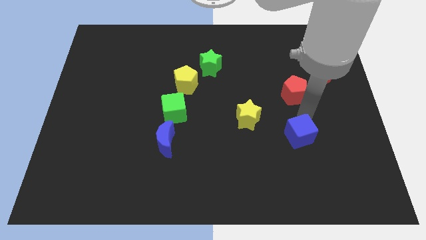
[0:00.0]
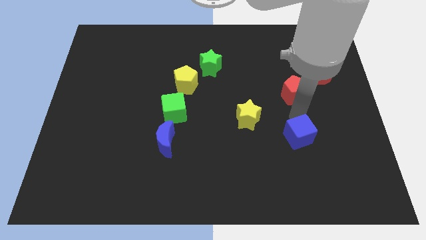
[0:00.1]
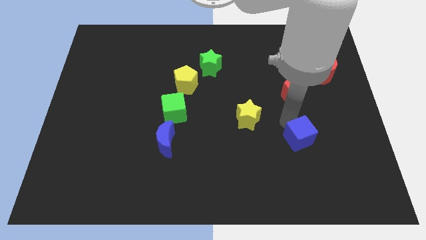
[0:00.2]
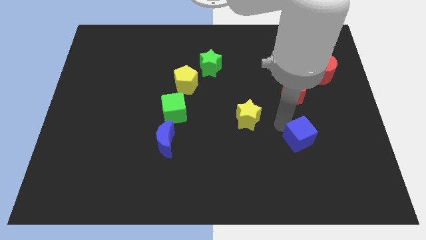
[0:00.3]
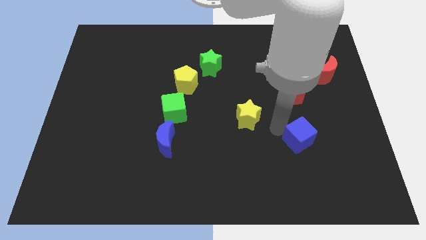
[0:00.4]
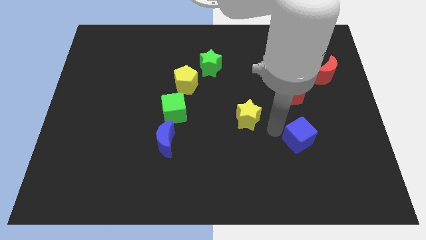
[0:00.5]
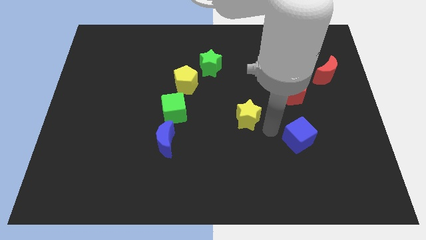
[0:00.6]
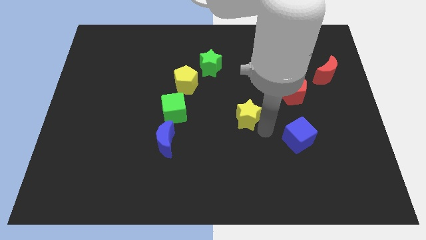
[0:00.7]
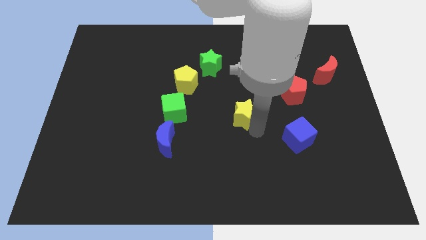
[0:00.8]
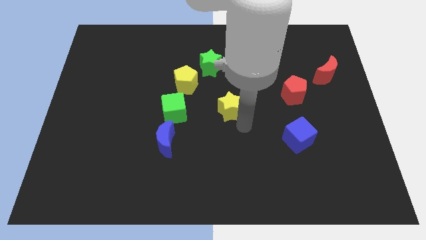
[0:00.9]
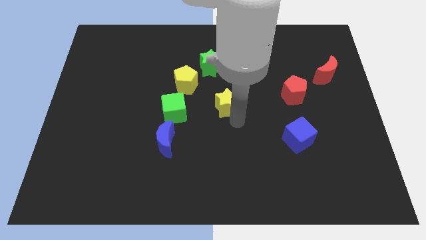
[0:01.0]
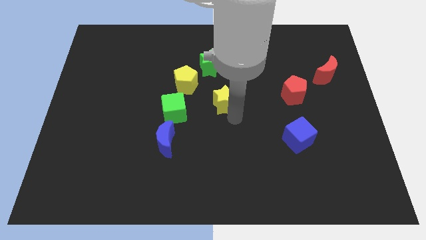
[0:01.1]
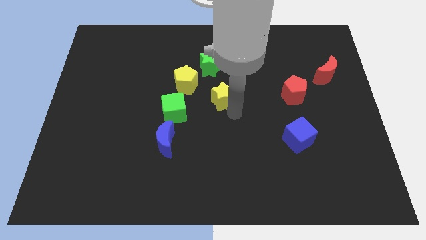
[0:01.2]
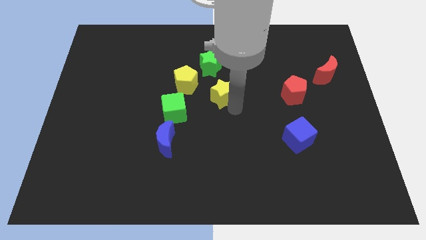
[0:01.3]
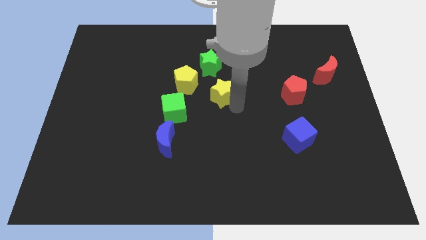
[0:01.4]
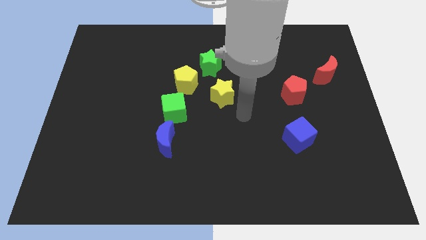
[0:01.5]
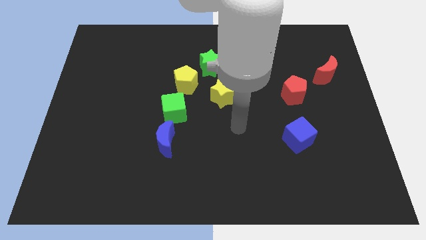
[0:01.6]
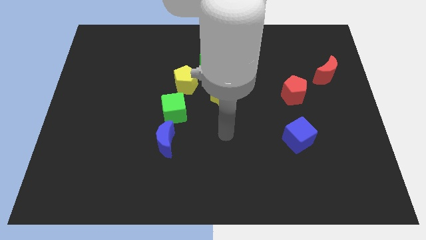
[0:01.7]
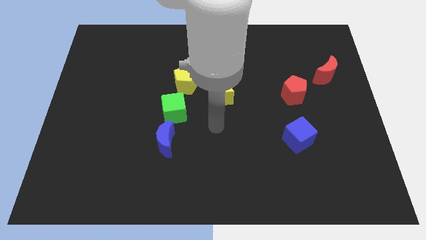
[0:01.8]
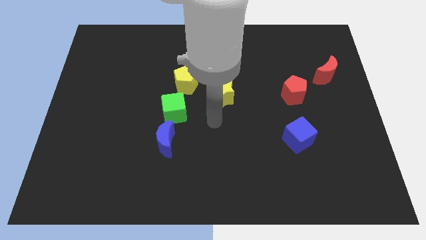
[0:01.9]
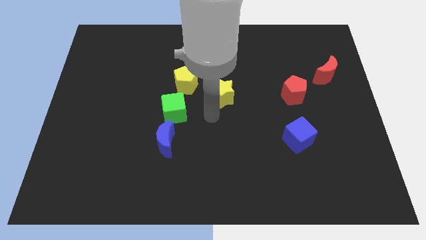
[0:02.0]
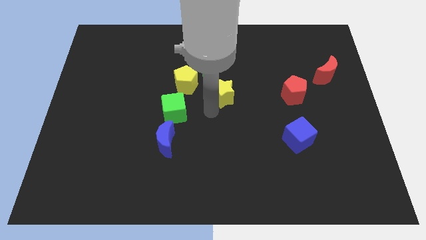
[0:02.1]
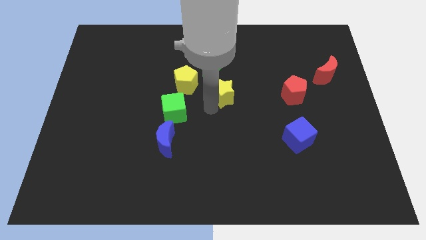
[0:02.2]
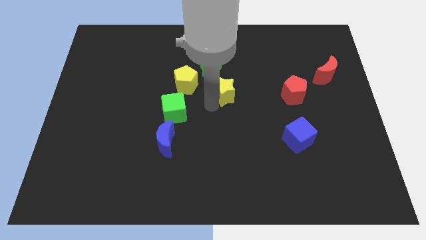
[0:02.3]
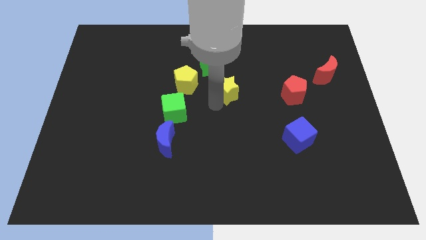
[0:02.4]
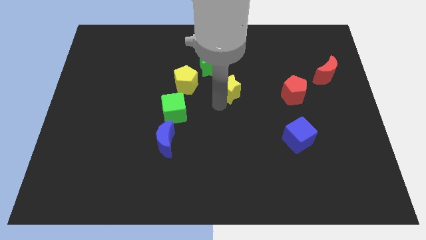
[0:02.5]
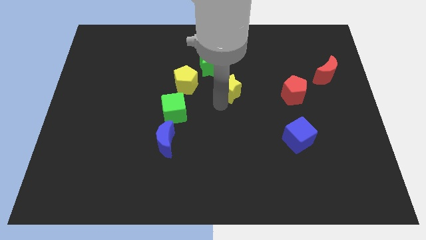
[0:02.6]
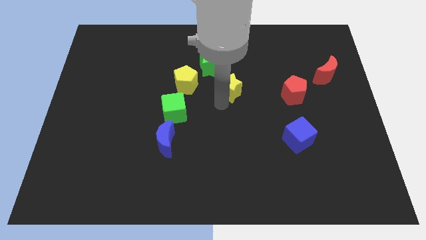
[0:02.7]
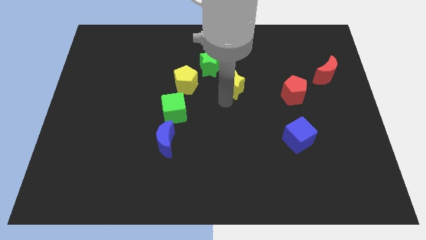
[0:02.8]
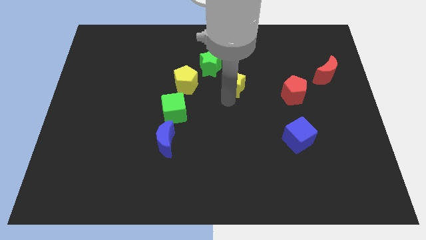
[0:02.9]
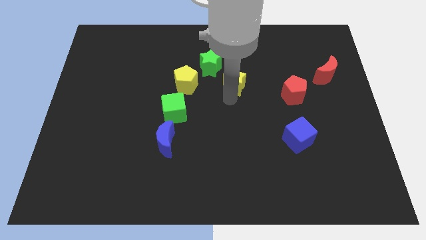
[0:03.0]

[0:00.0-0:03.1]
place yellow star diagonal to green star

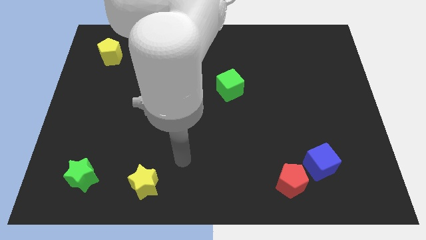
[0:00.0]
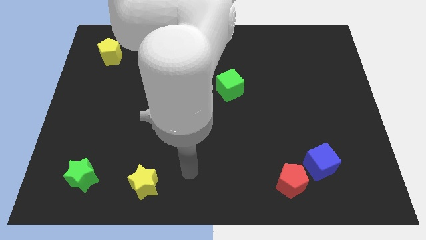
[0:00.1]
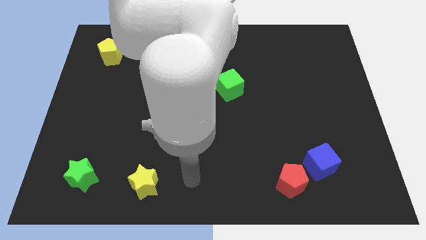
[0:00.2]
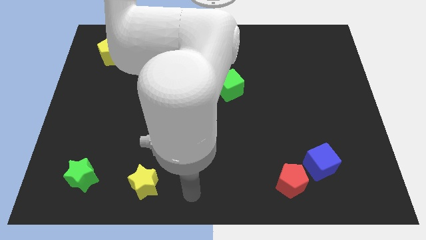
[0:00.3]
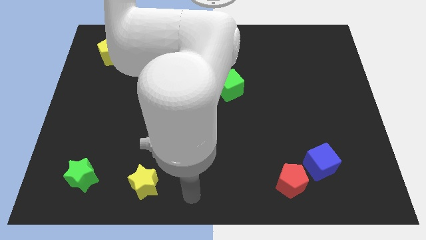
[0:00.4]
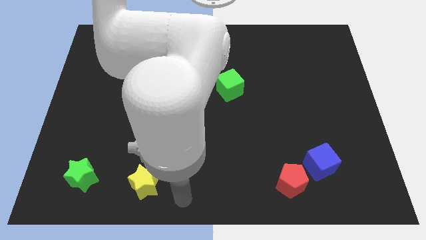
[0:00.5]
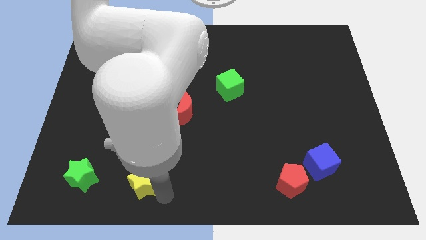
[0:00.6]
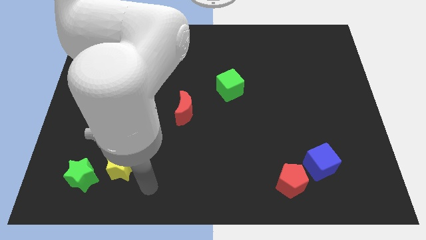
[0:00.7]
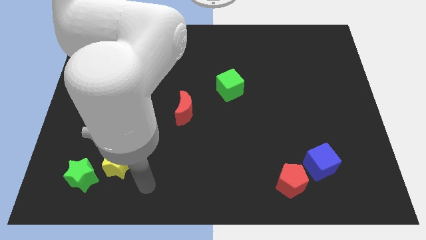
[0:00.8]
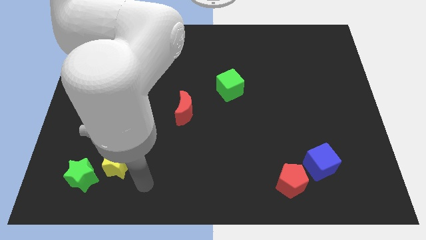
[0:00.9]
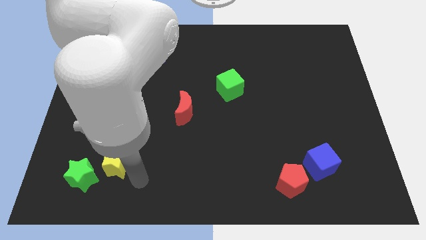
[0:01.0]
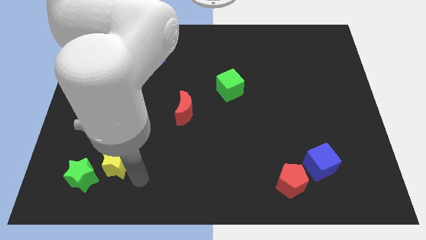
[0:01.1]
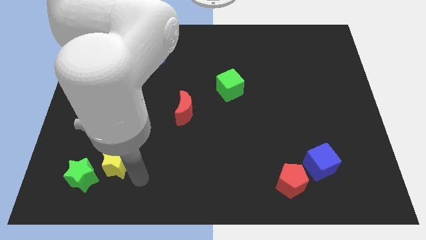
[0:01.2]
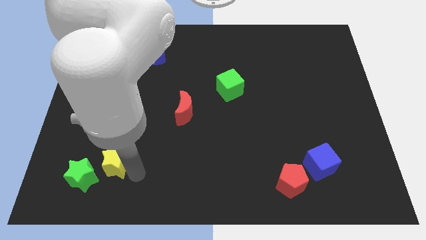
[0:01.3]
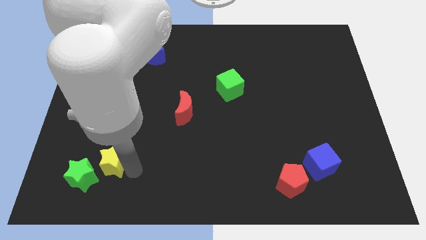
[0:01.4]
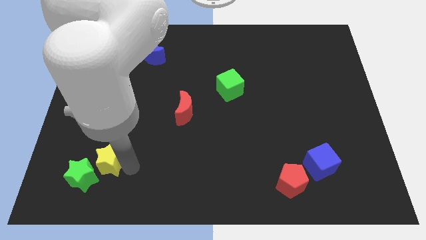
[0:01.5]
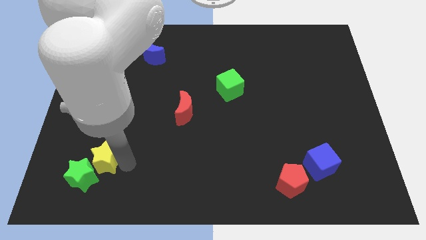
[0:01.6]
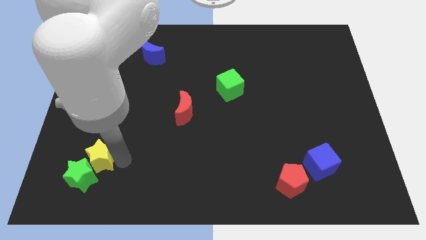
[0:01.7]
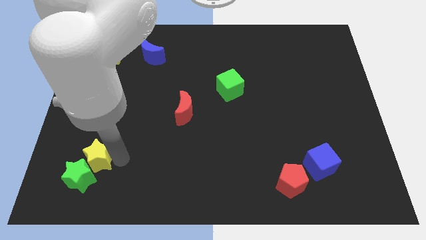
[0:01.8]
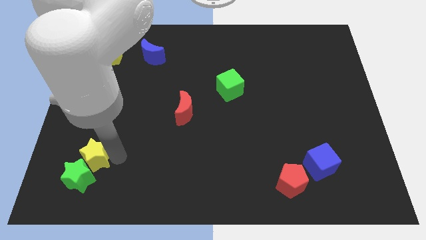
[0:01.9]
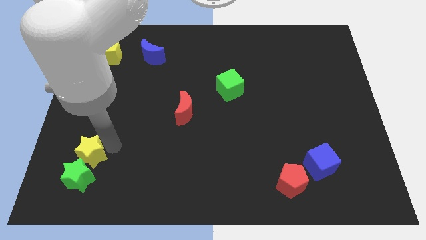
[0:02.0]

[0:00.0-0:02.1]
place the yellow star above the green star

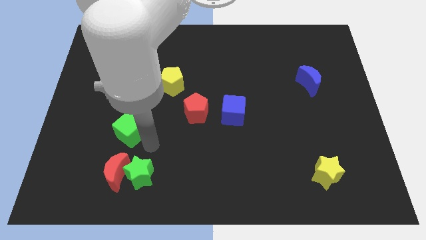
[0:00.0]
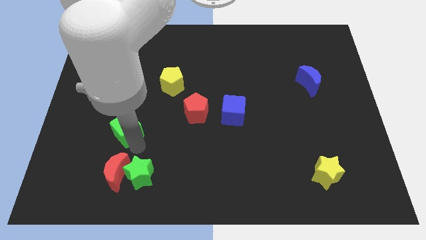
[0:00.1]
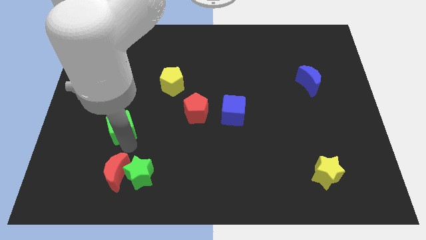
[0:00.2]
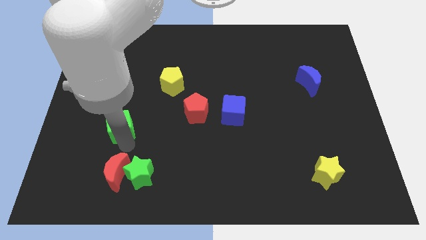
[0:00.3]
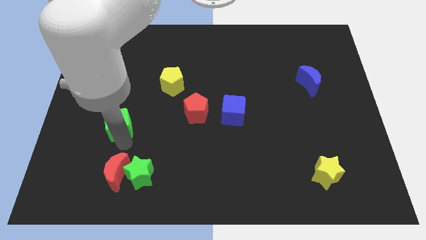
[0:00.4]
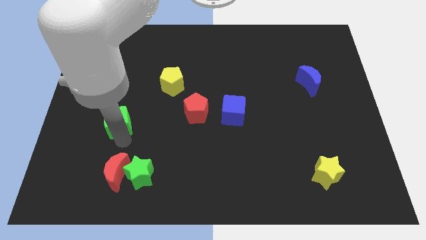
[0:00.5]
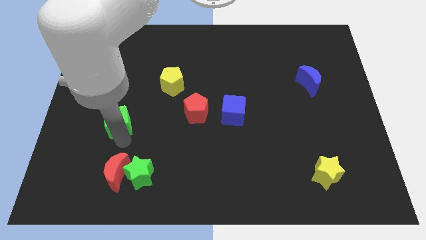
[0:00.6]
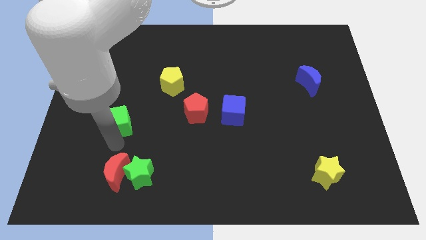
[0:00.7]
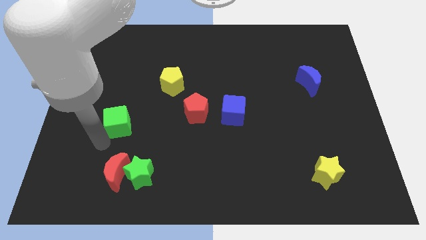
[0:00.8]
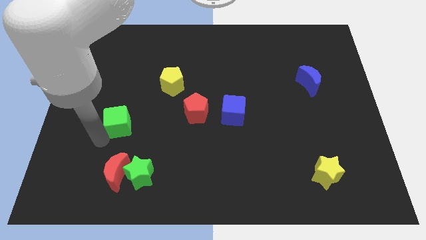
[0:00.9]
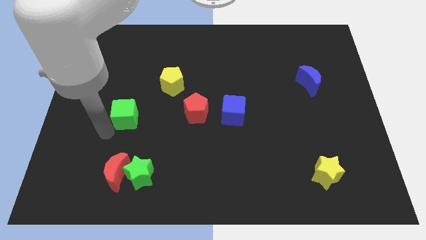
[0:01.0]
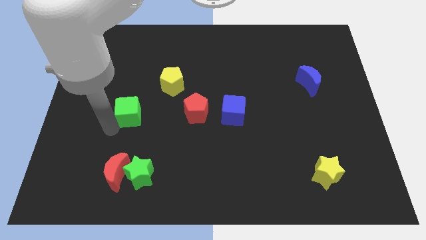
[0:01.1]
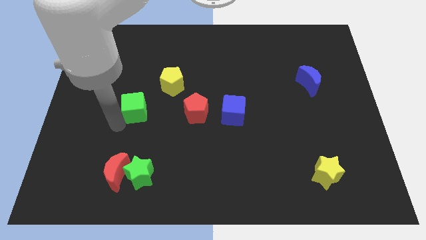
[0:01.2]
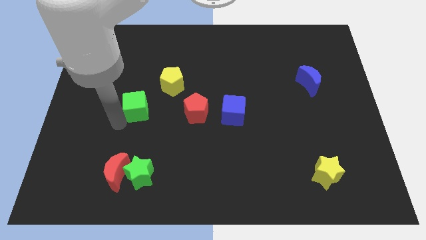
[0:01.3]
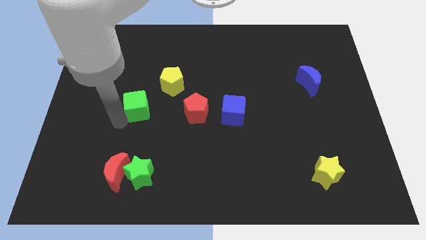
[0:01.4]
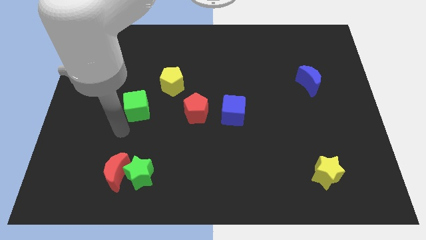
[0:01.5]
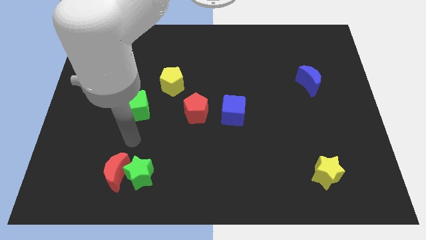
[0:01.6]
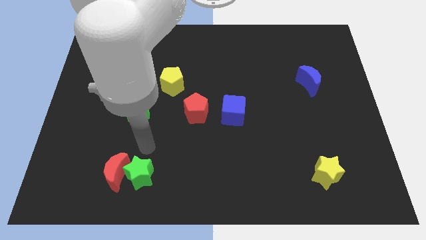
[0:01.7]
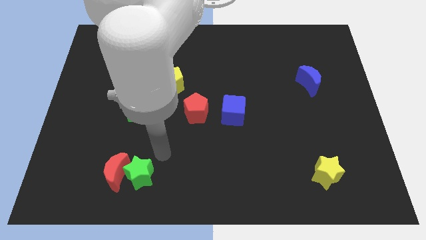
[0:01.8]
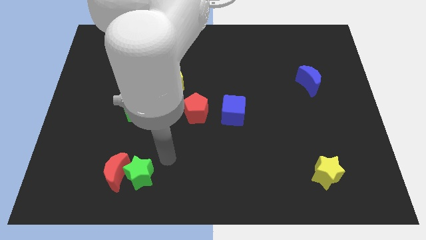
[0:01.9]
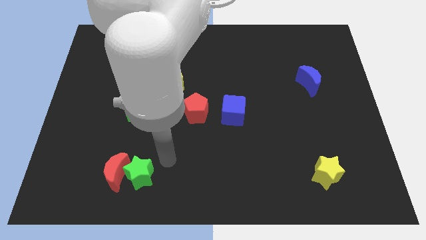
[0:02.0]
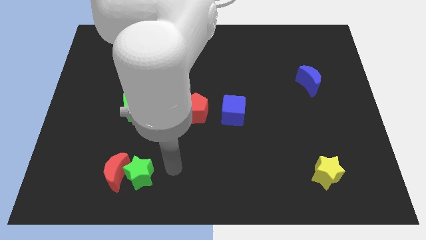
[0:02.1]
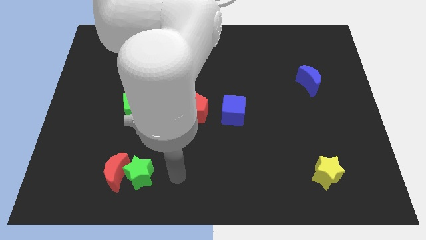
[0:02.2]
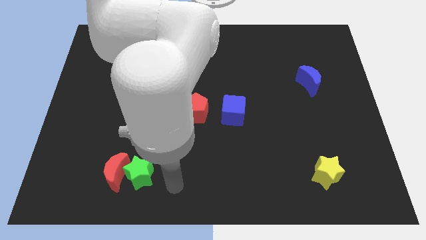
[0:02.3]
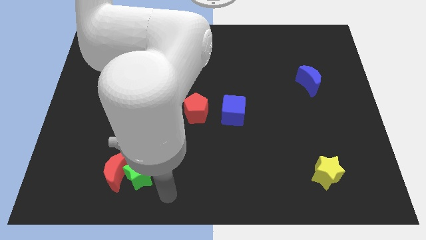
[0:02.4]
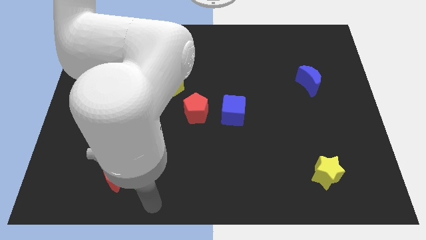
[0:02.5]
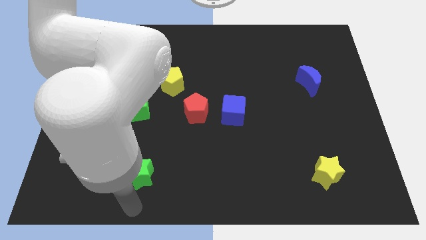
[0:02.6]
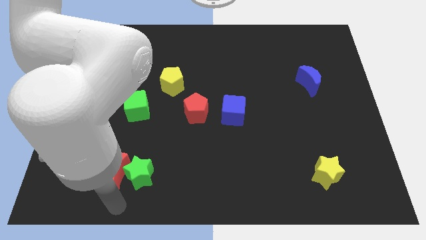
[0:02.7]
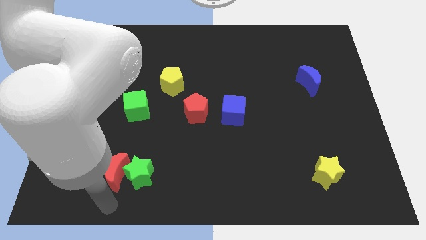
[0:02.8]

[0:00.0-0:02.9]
push the green cube horizontally to the left of the red pentagon

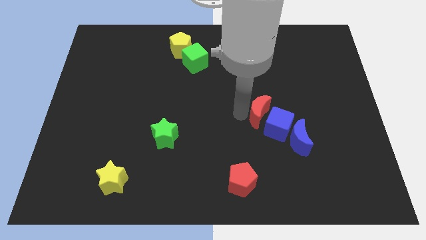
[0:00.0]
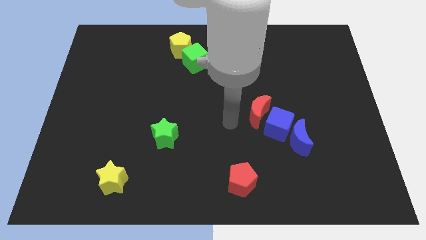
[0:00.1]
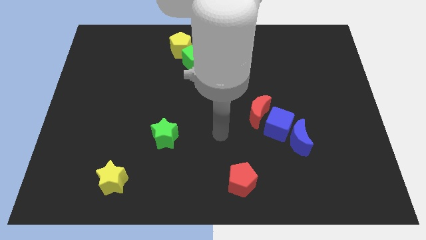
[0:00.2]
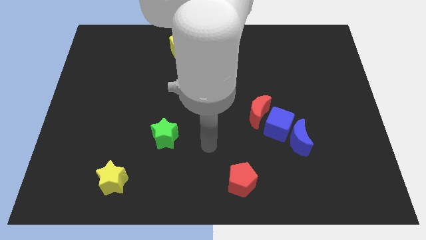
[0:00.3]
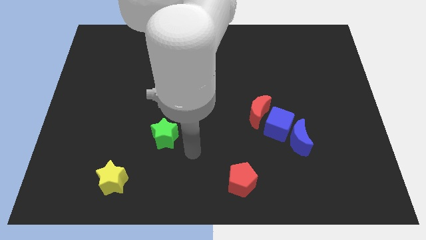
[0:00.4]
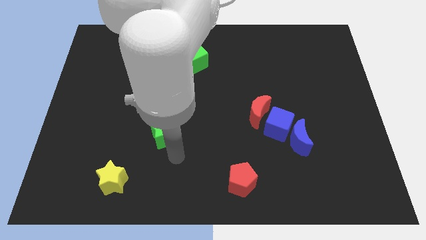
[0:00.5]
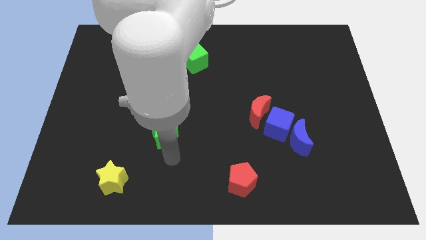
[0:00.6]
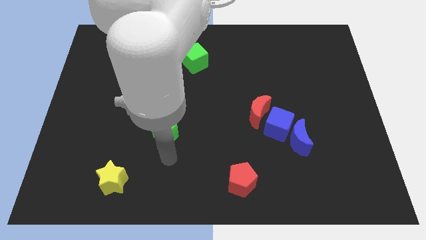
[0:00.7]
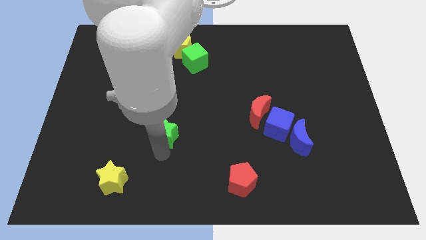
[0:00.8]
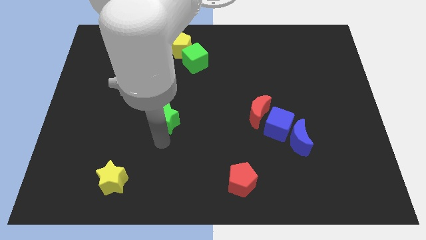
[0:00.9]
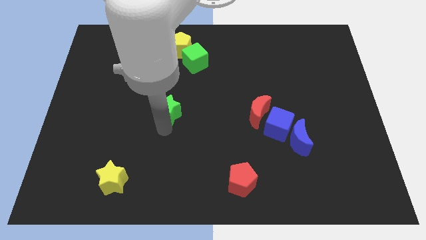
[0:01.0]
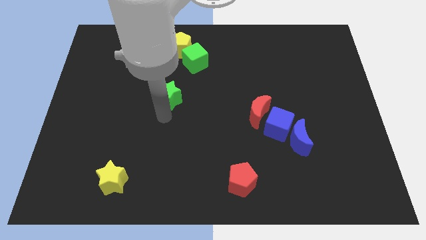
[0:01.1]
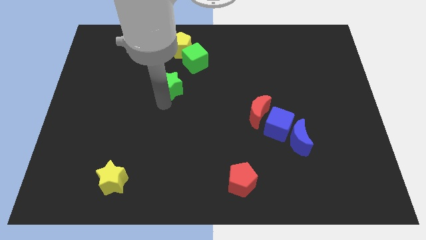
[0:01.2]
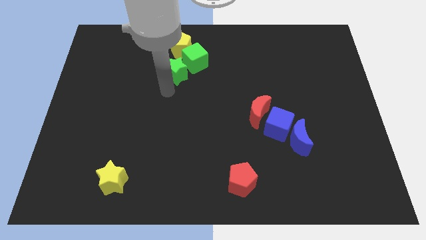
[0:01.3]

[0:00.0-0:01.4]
push the green star towards the bottom left of the green cube
